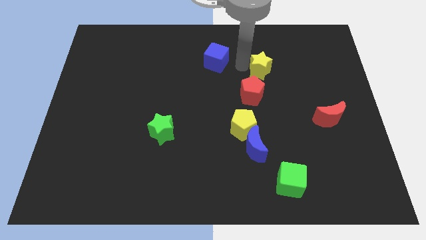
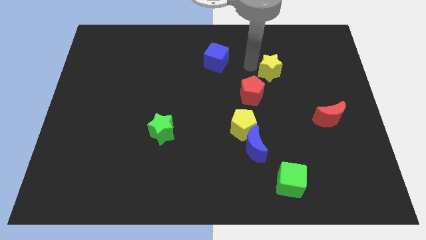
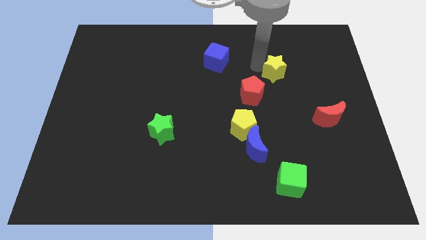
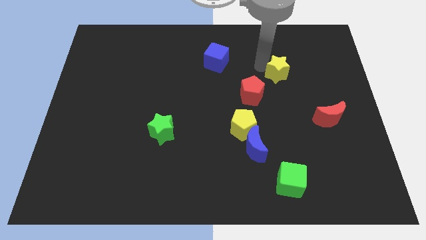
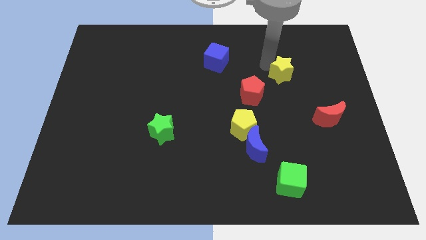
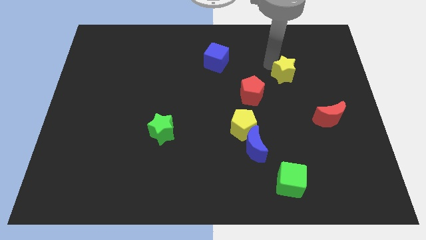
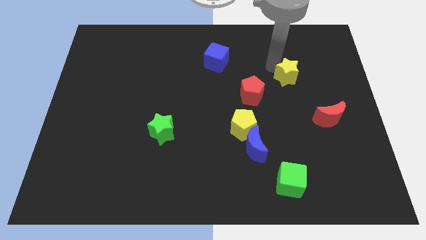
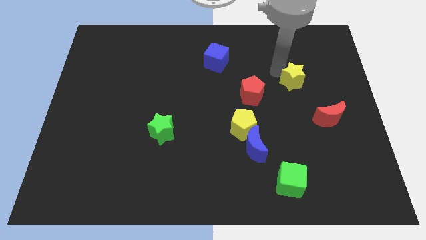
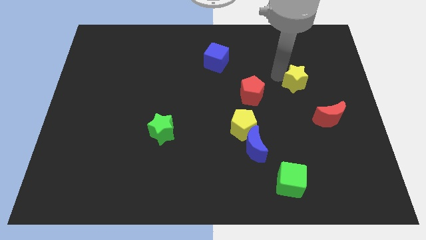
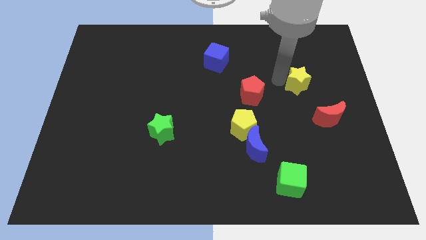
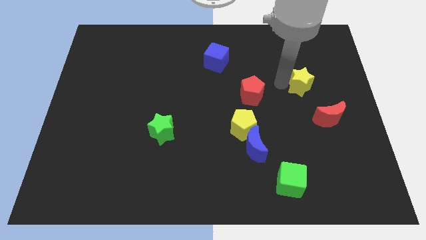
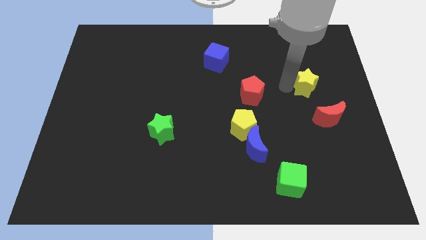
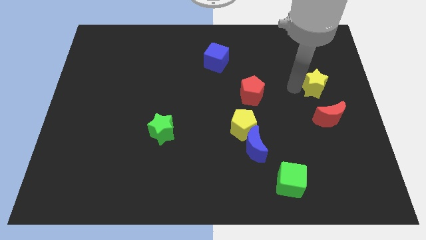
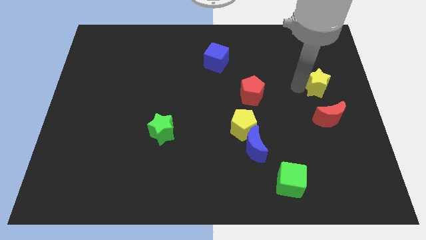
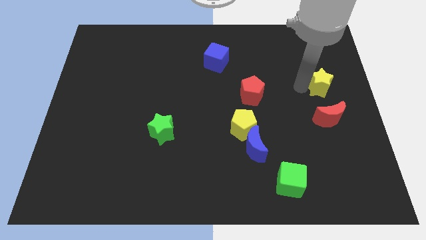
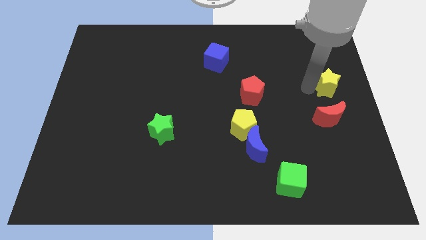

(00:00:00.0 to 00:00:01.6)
move the yellow star to the top side of the red moon

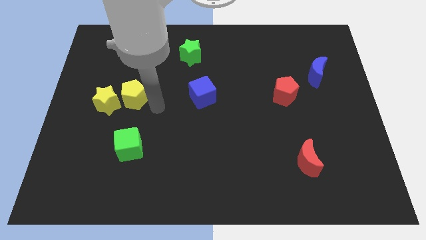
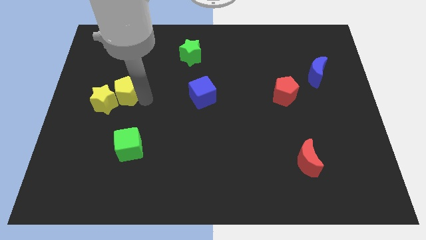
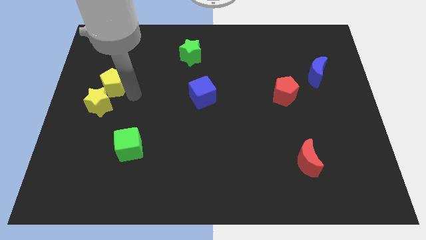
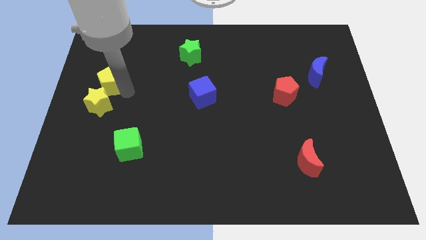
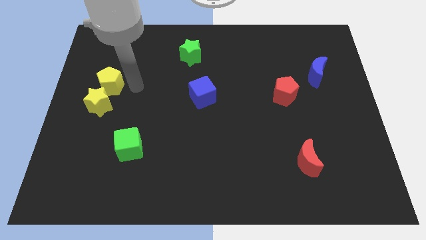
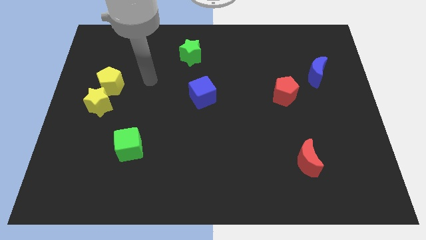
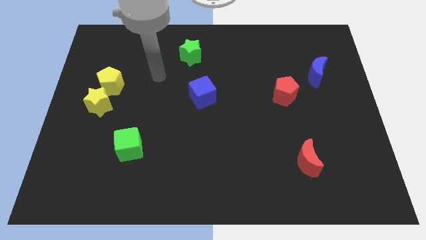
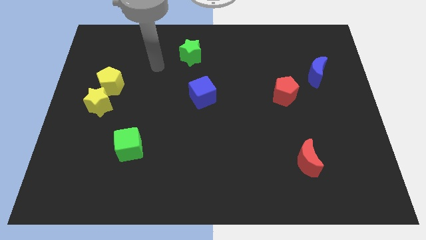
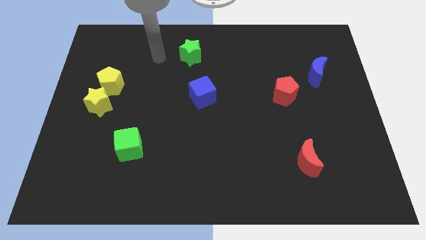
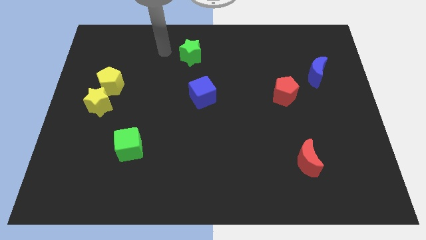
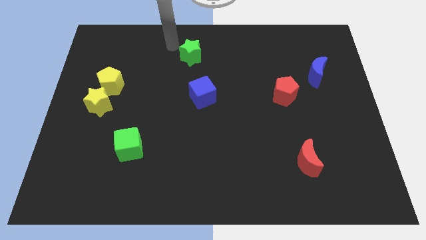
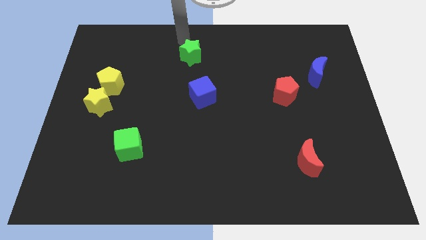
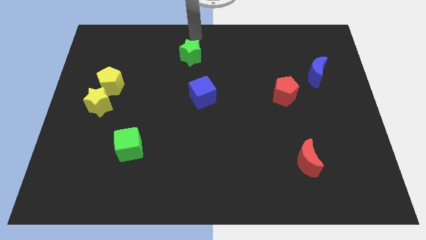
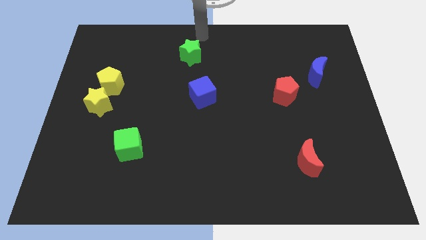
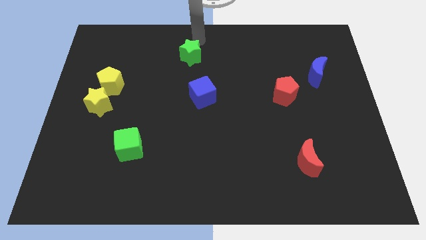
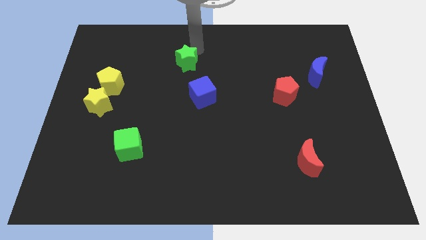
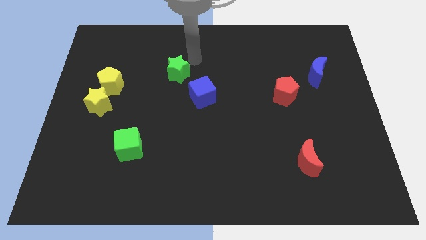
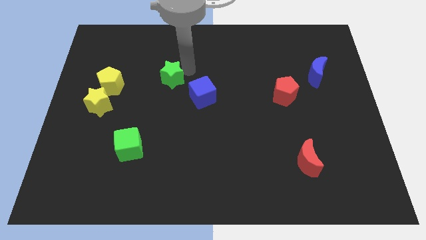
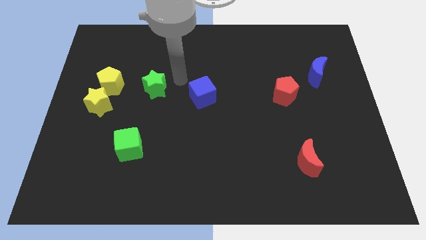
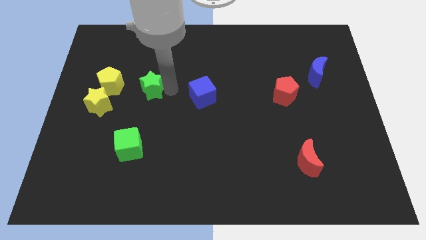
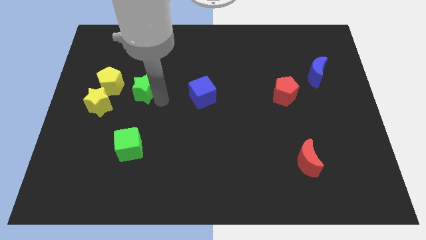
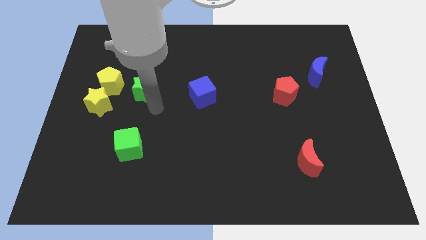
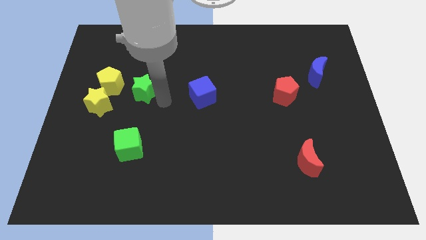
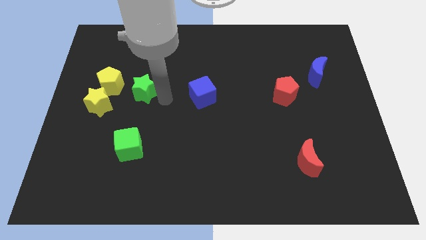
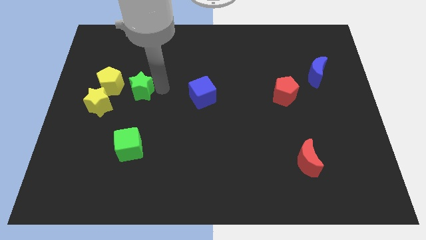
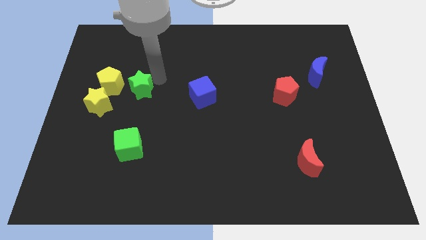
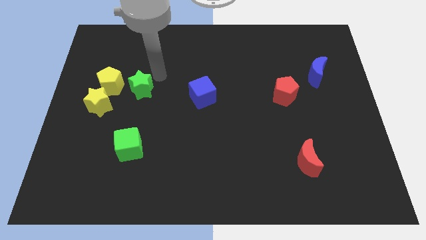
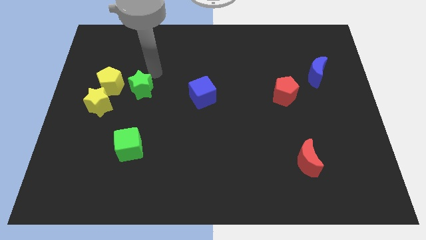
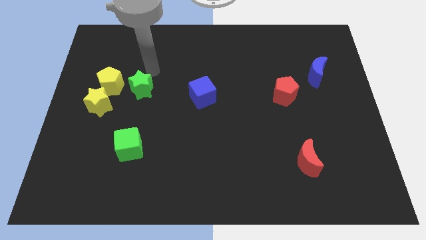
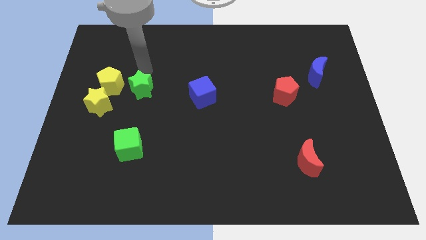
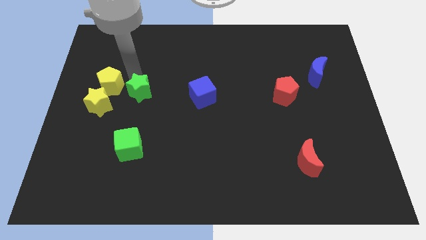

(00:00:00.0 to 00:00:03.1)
place the green star towards the right side of the yellow pentagon

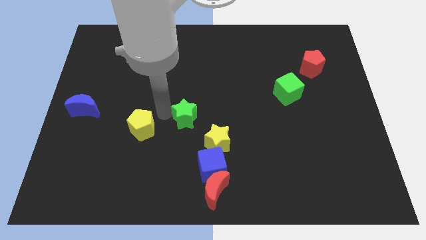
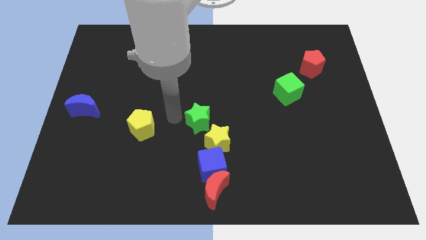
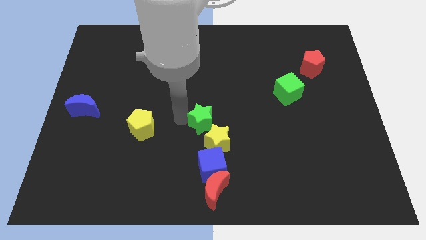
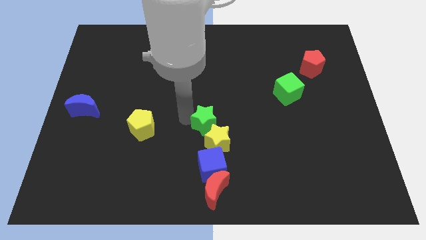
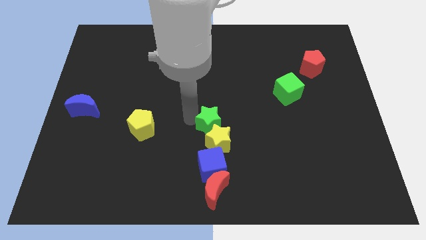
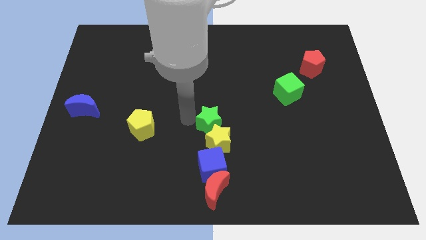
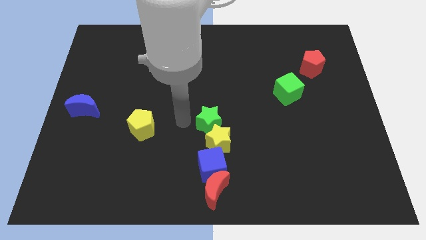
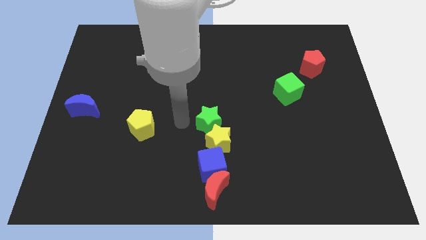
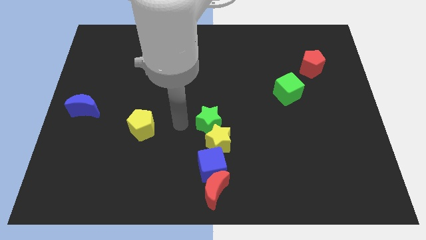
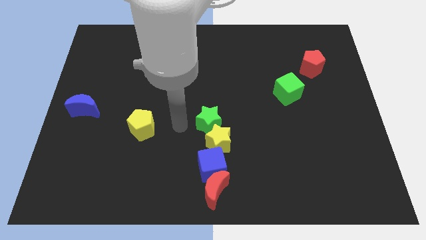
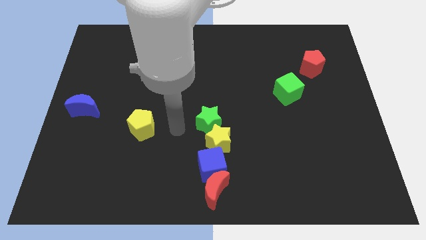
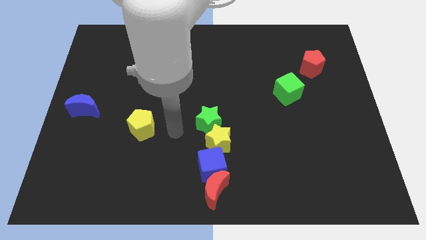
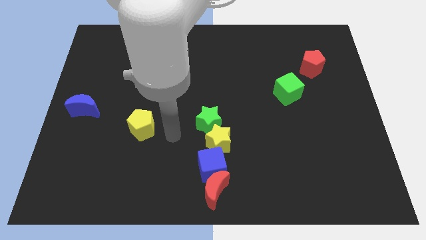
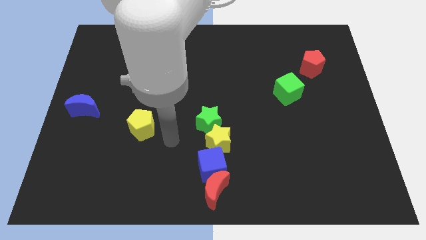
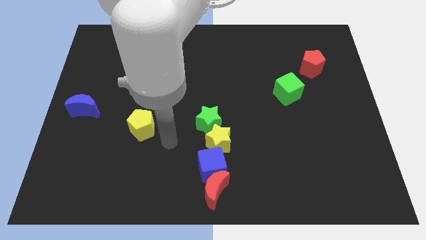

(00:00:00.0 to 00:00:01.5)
push green star above yellow star

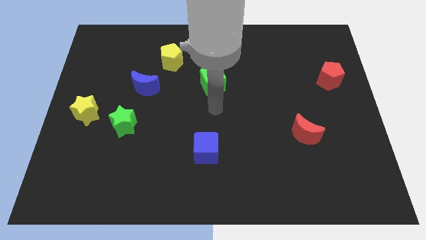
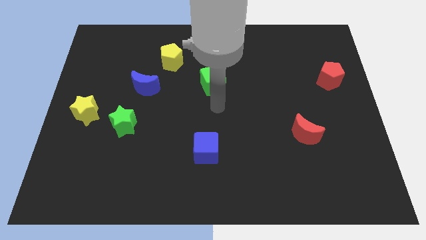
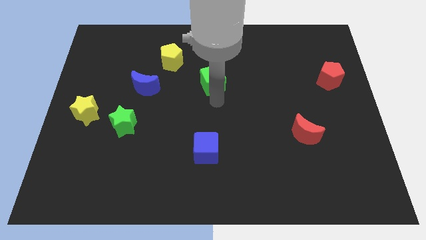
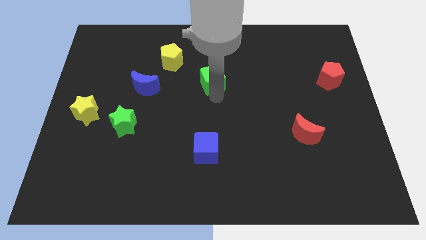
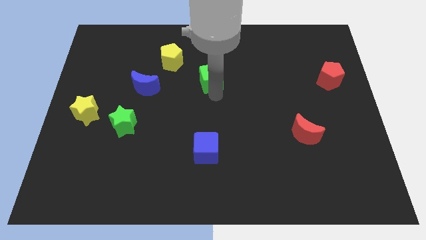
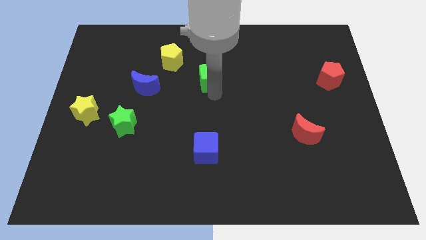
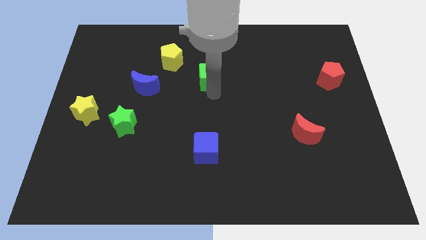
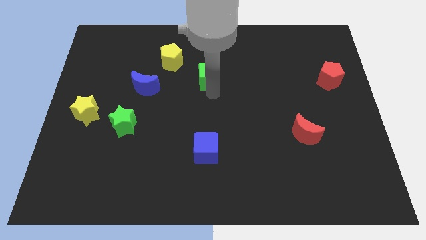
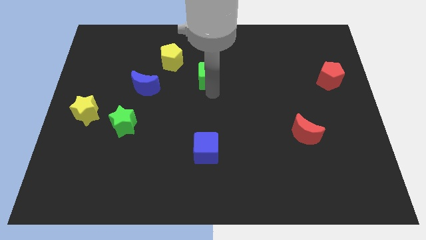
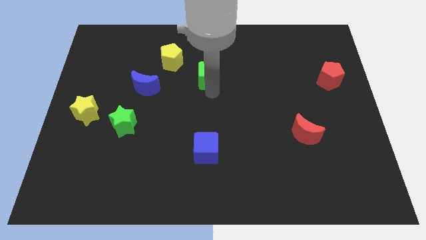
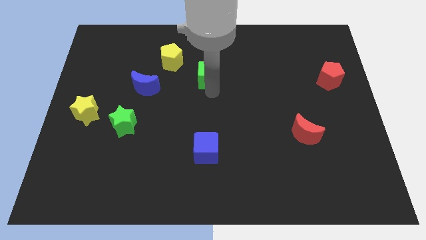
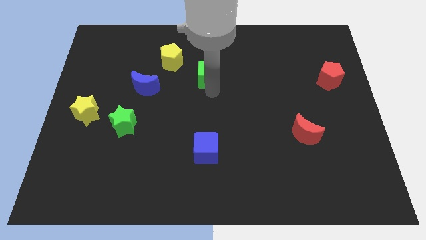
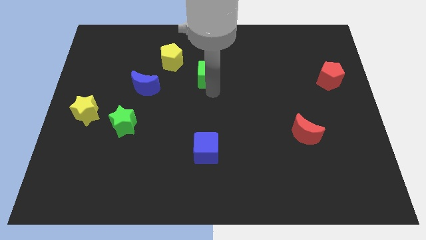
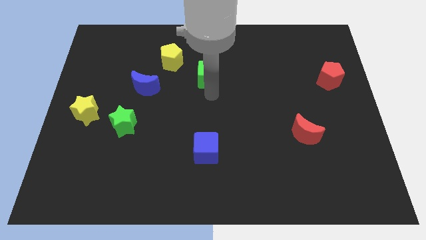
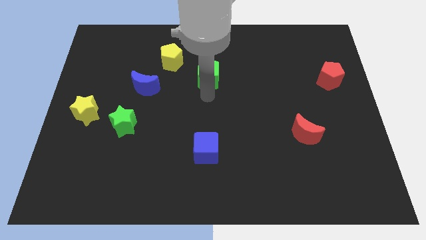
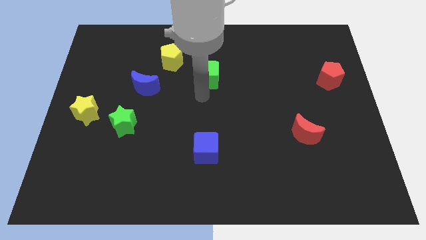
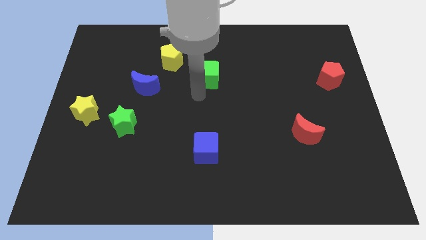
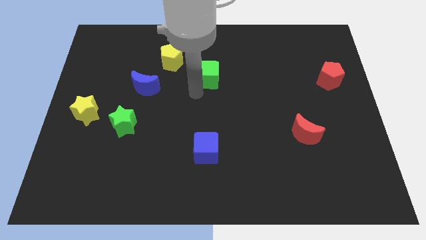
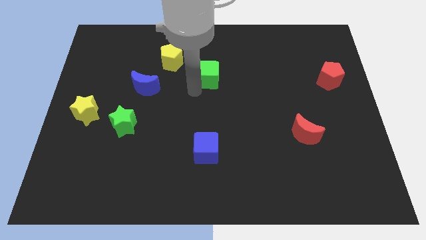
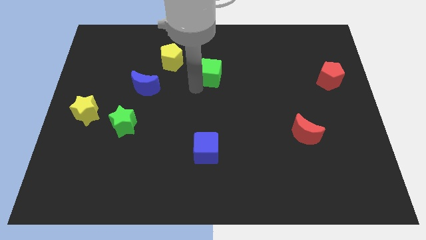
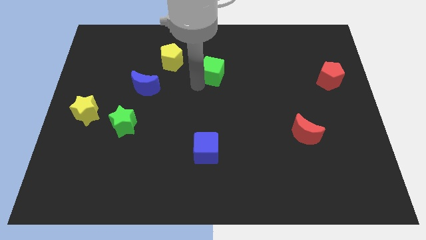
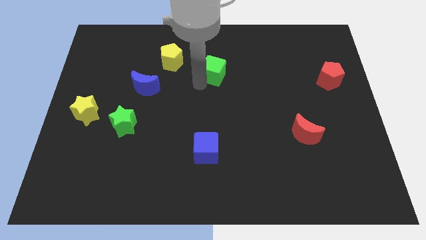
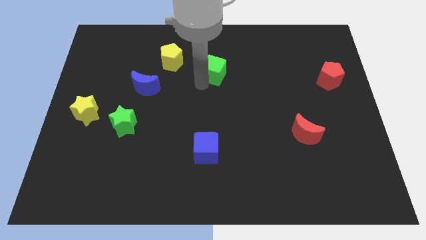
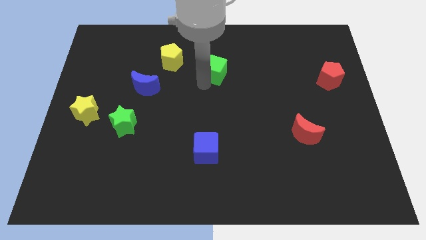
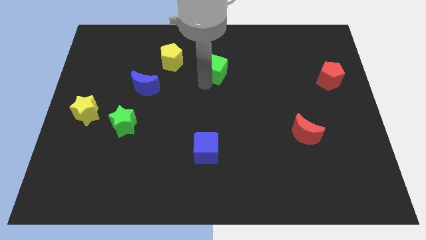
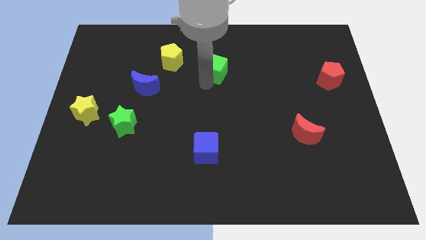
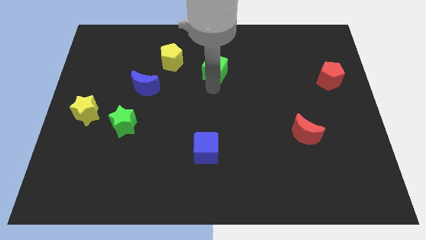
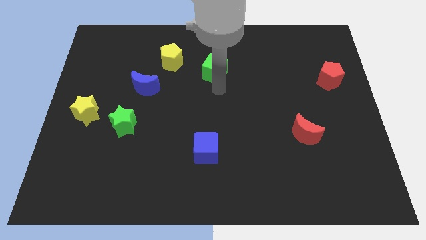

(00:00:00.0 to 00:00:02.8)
move the green cube slightly to the top
